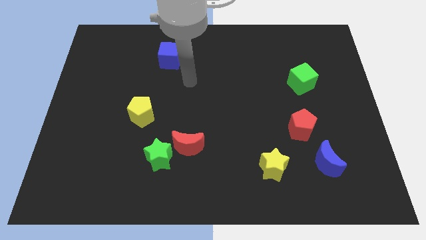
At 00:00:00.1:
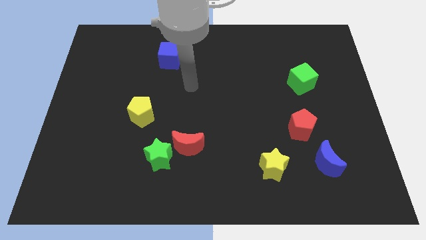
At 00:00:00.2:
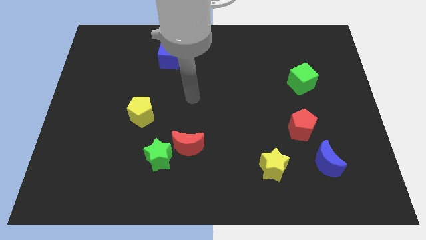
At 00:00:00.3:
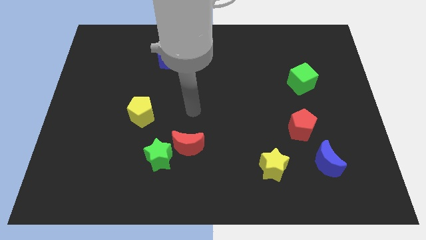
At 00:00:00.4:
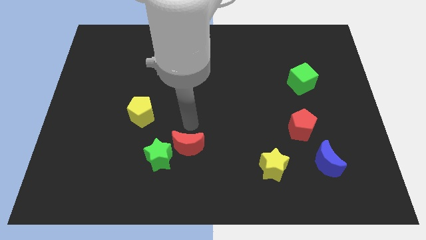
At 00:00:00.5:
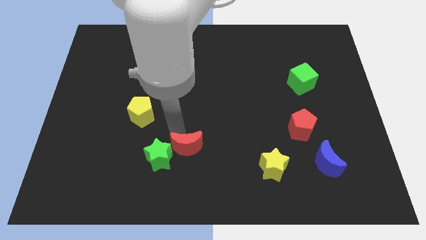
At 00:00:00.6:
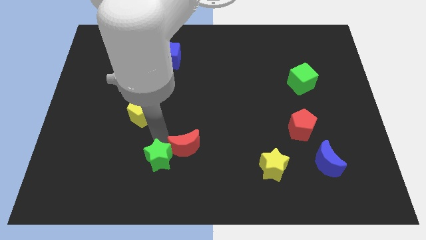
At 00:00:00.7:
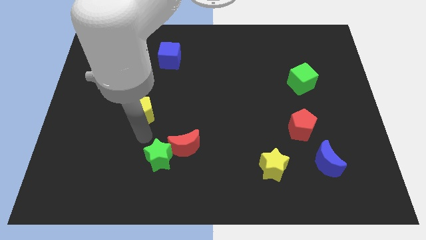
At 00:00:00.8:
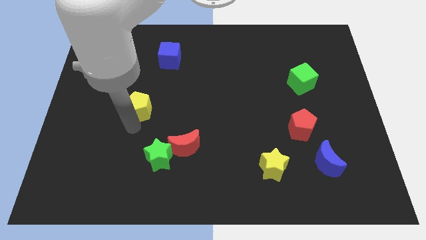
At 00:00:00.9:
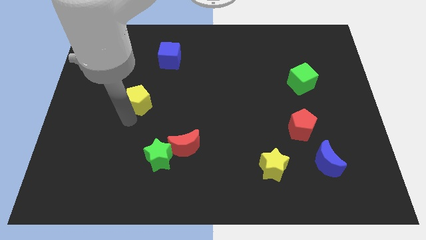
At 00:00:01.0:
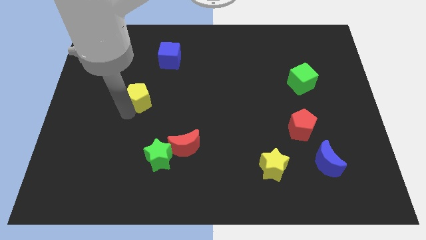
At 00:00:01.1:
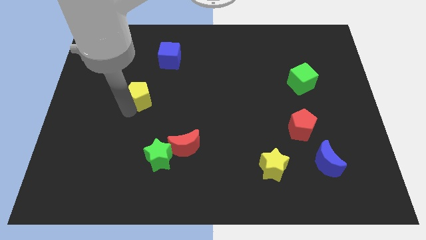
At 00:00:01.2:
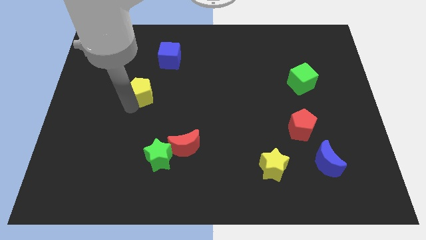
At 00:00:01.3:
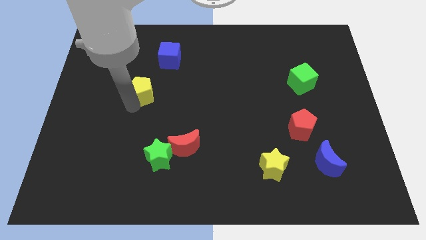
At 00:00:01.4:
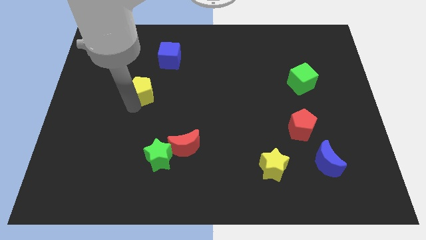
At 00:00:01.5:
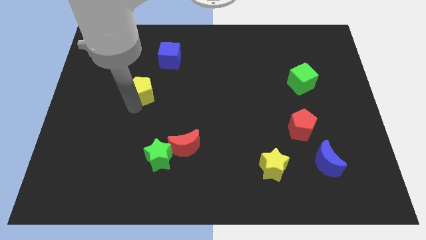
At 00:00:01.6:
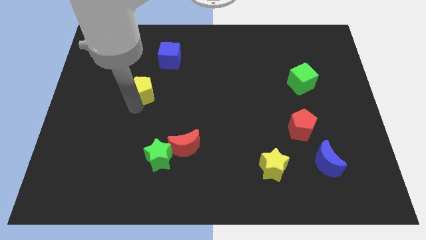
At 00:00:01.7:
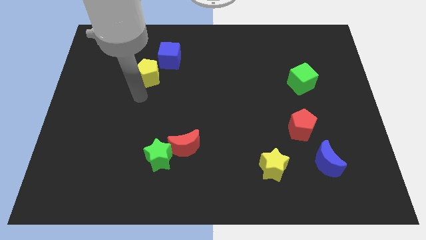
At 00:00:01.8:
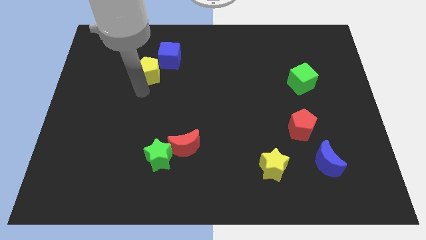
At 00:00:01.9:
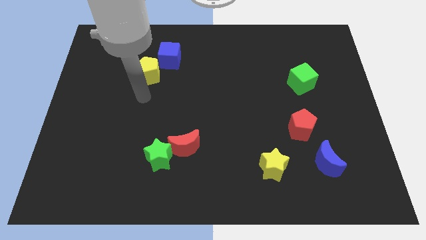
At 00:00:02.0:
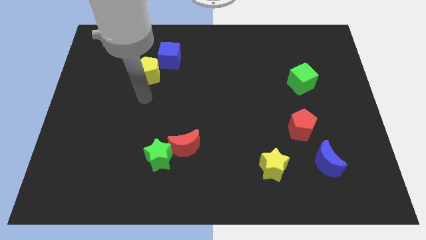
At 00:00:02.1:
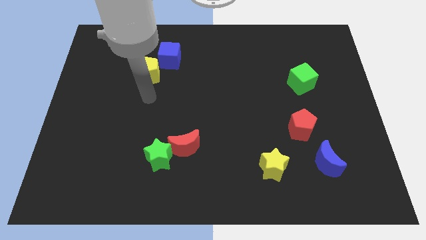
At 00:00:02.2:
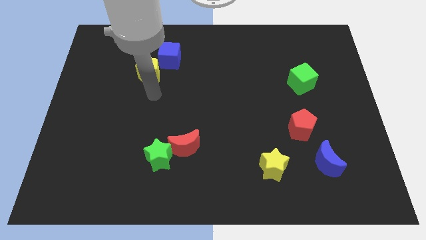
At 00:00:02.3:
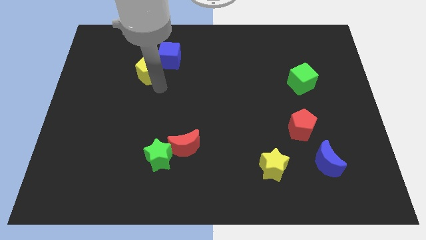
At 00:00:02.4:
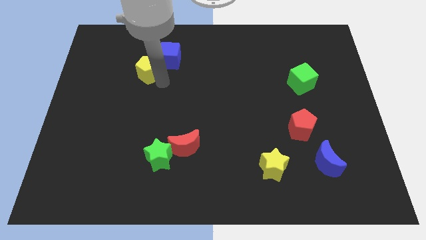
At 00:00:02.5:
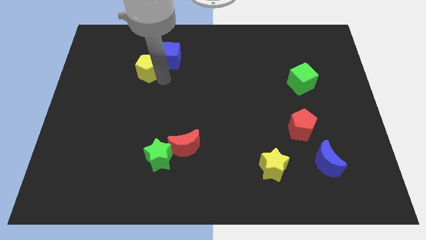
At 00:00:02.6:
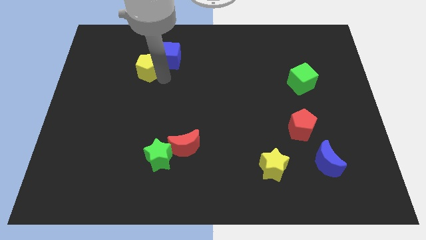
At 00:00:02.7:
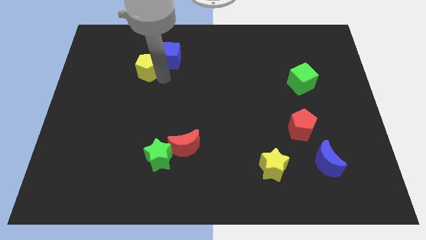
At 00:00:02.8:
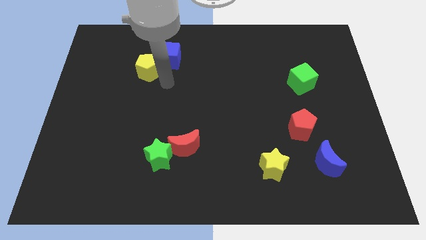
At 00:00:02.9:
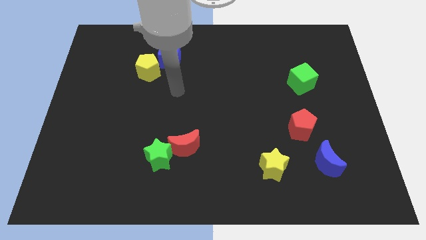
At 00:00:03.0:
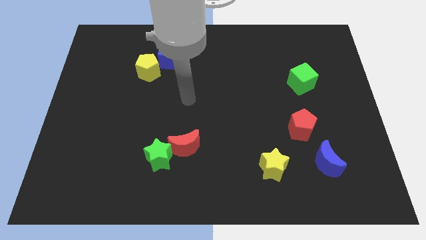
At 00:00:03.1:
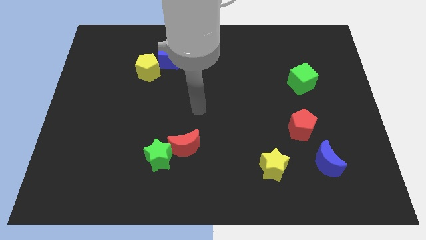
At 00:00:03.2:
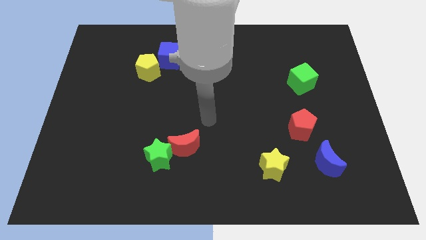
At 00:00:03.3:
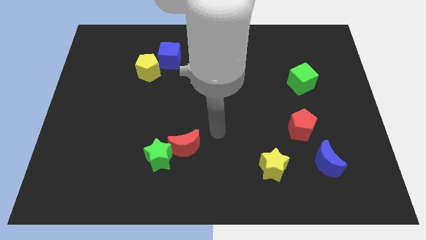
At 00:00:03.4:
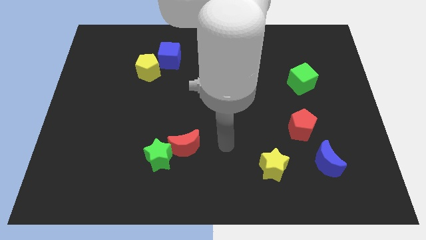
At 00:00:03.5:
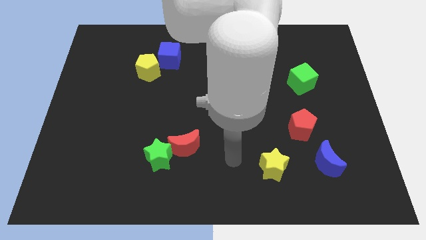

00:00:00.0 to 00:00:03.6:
push the yellow pentagon to the left bottom of the blue cube

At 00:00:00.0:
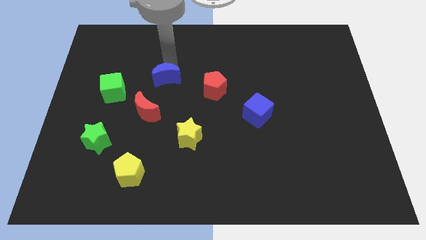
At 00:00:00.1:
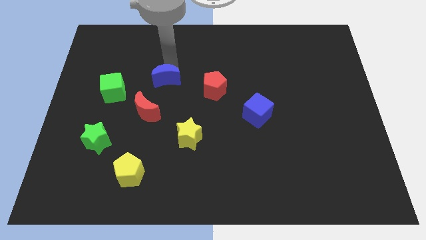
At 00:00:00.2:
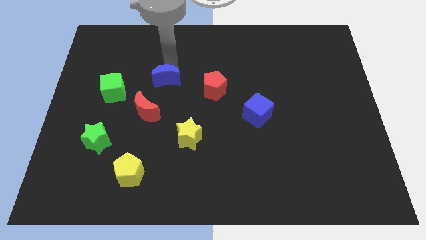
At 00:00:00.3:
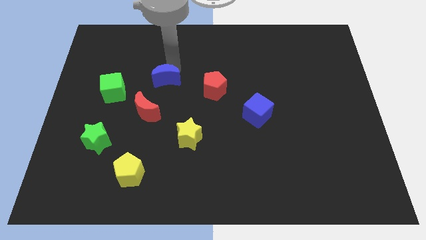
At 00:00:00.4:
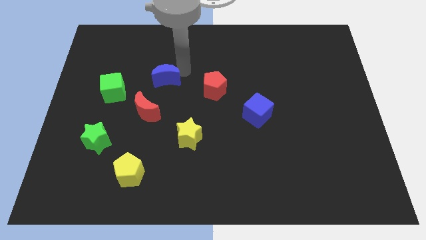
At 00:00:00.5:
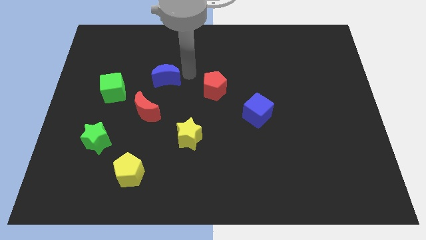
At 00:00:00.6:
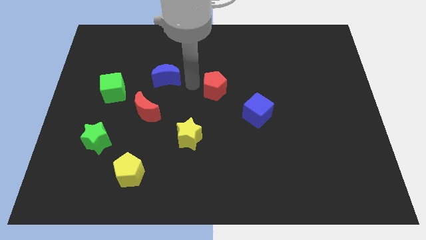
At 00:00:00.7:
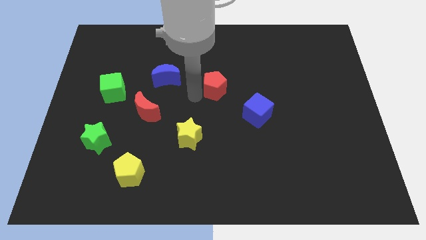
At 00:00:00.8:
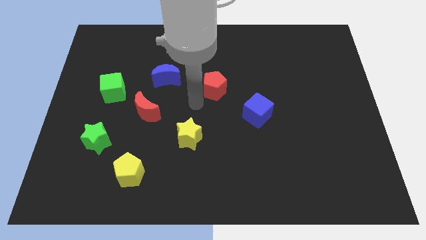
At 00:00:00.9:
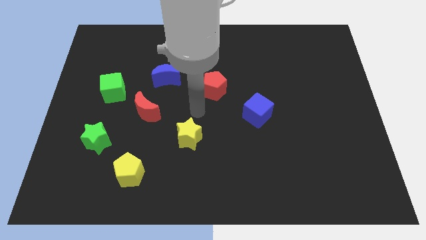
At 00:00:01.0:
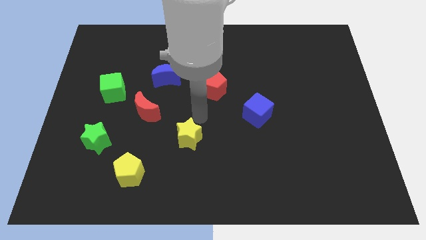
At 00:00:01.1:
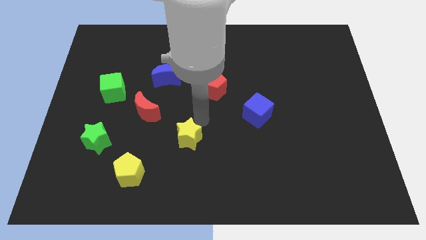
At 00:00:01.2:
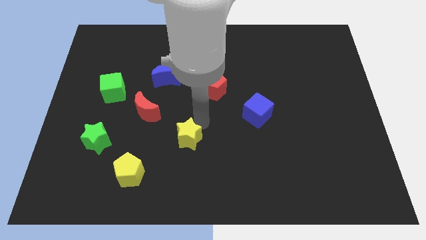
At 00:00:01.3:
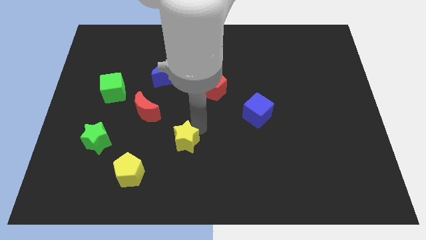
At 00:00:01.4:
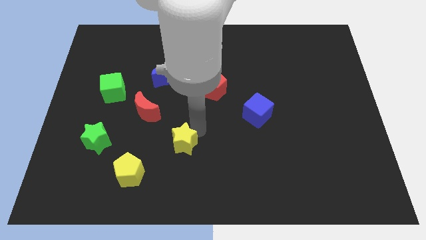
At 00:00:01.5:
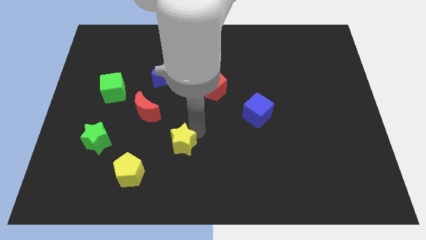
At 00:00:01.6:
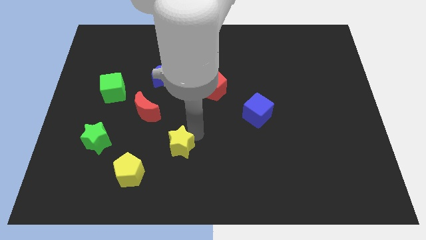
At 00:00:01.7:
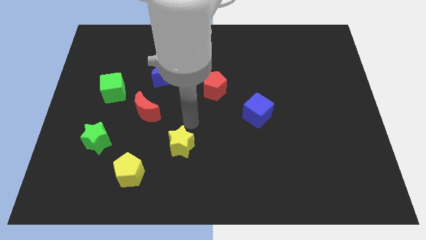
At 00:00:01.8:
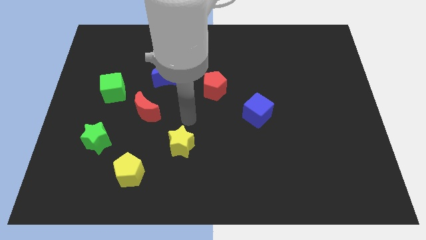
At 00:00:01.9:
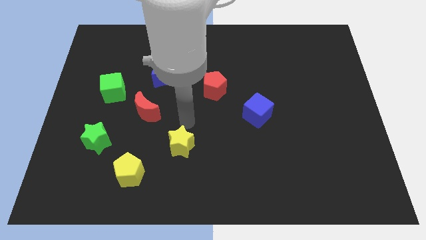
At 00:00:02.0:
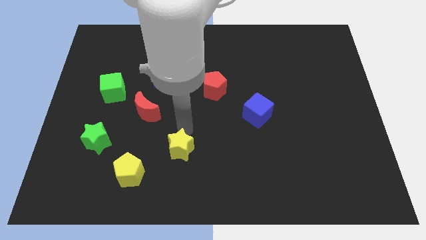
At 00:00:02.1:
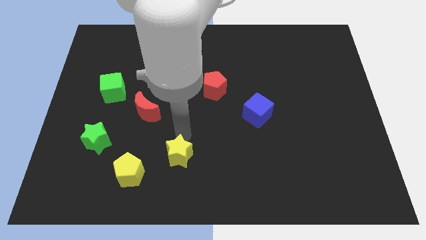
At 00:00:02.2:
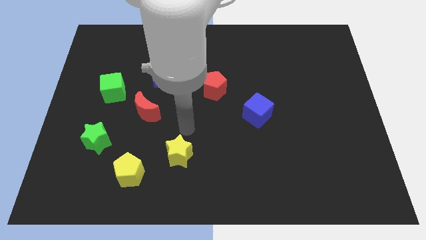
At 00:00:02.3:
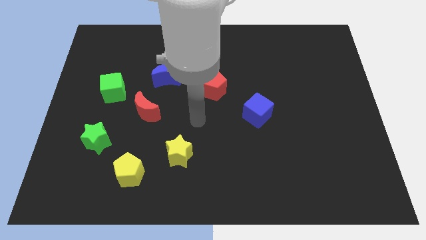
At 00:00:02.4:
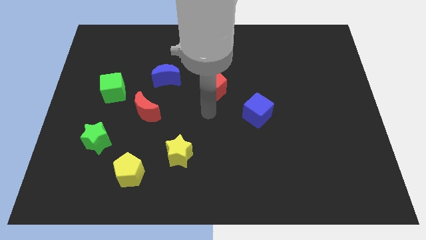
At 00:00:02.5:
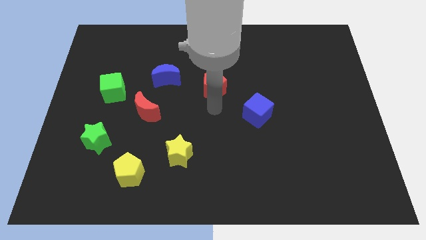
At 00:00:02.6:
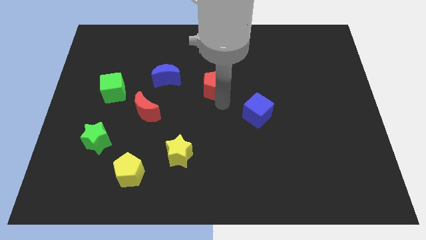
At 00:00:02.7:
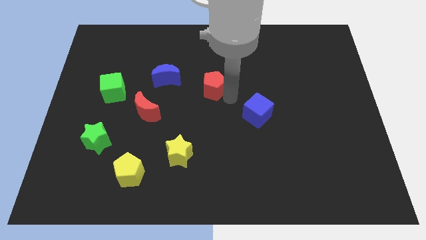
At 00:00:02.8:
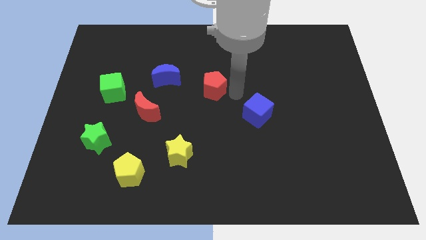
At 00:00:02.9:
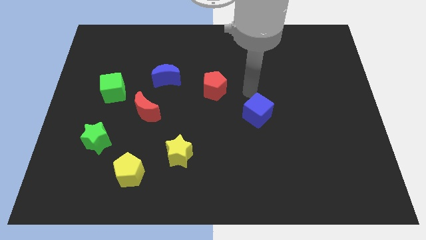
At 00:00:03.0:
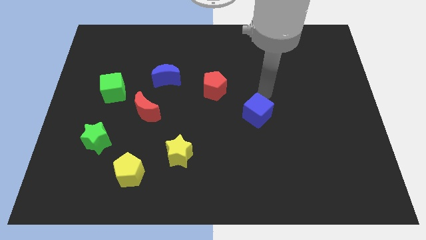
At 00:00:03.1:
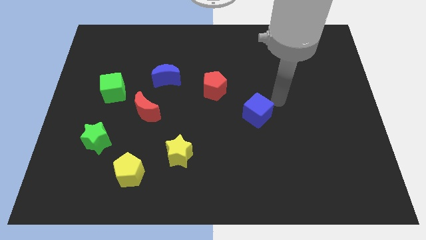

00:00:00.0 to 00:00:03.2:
move the yellow star to the top right side of the yellow pentagon

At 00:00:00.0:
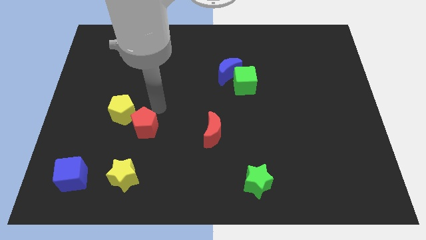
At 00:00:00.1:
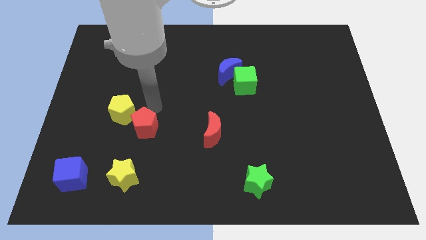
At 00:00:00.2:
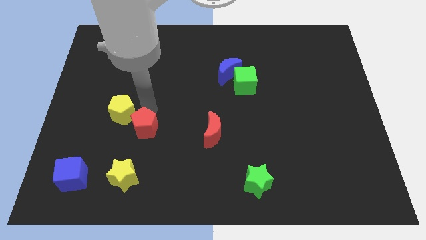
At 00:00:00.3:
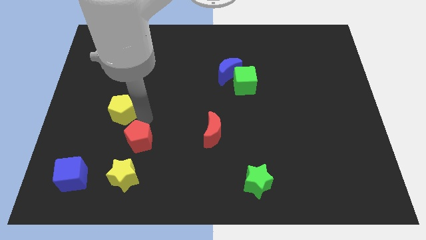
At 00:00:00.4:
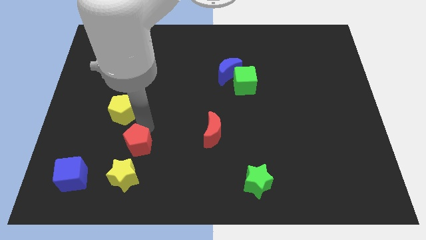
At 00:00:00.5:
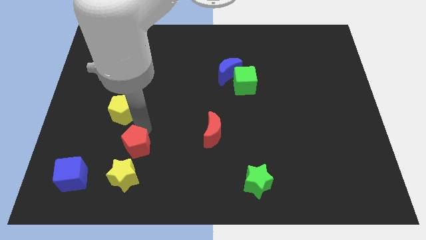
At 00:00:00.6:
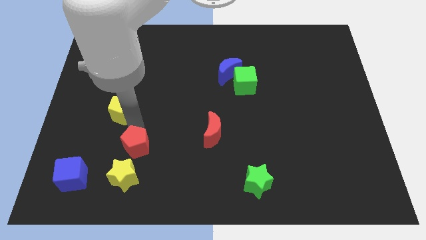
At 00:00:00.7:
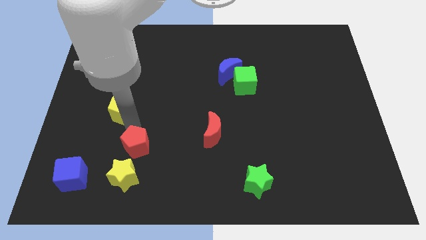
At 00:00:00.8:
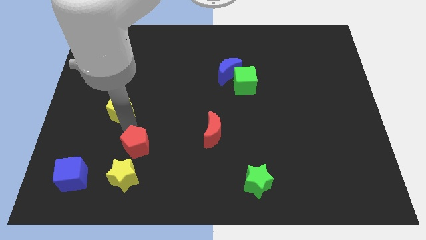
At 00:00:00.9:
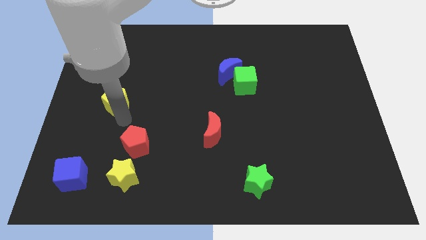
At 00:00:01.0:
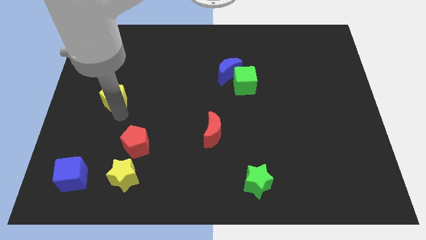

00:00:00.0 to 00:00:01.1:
separate red and yellow pentagons

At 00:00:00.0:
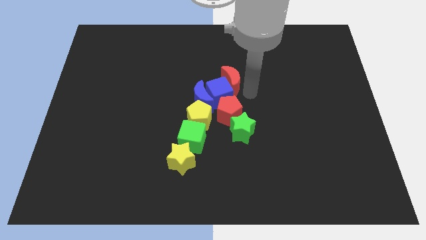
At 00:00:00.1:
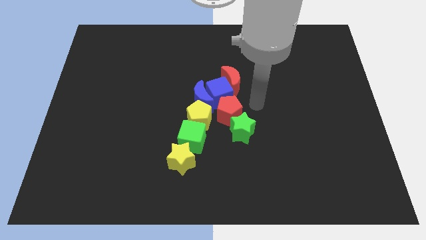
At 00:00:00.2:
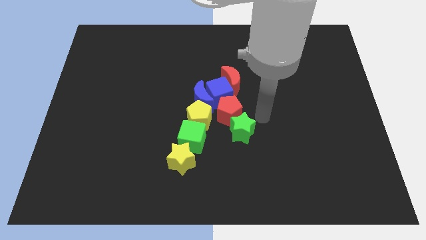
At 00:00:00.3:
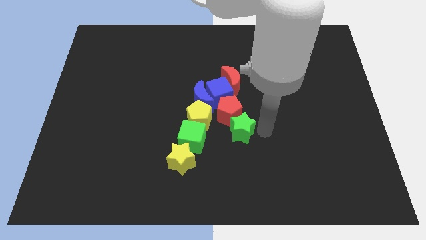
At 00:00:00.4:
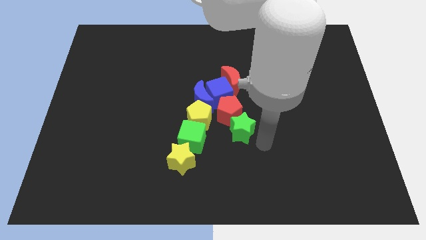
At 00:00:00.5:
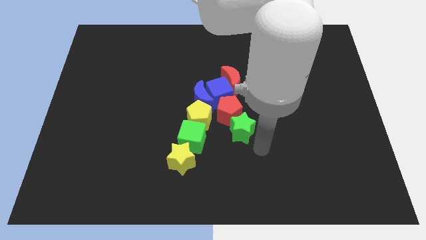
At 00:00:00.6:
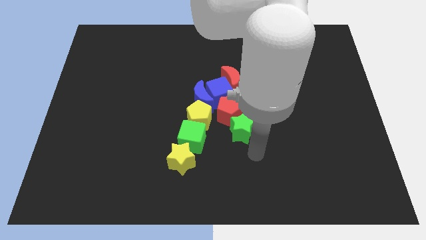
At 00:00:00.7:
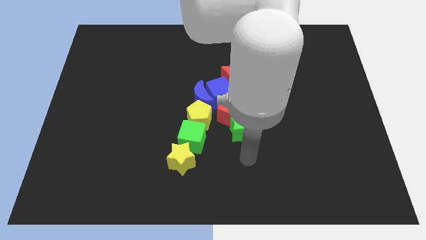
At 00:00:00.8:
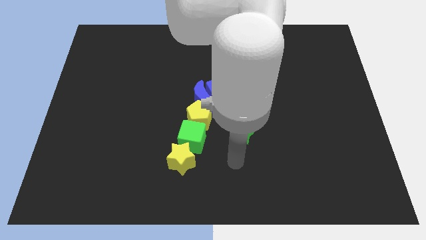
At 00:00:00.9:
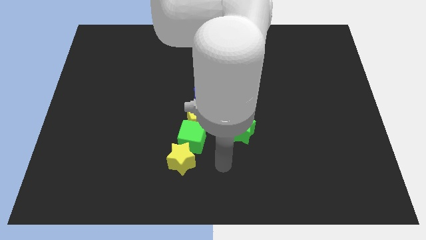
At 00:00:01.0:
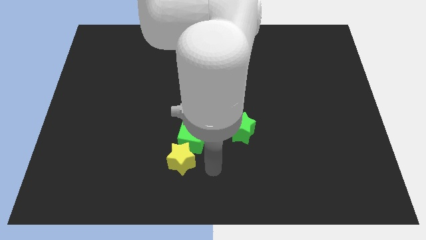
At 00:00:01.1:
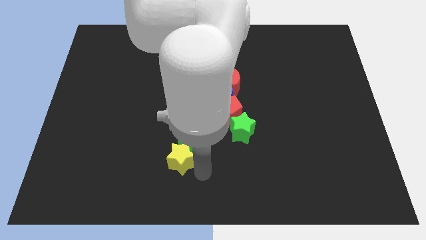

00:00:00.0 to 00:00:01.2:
point your arm at the bottom right of the yellow star
